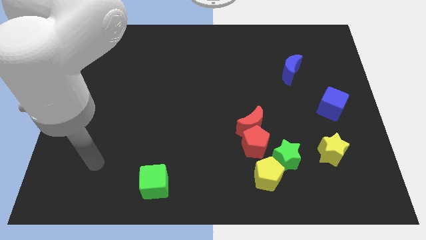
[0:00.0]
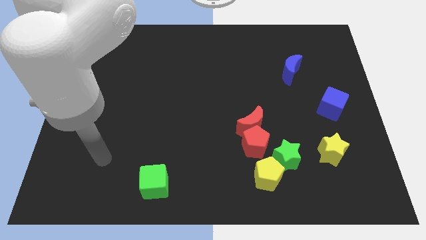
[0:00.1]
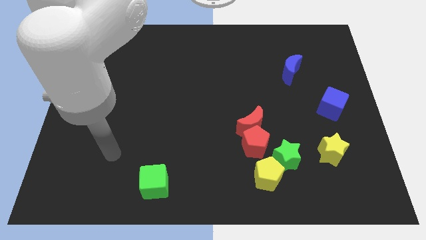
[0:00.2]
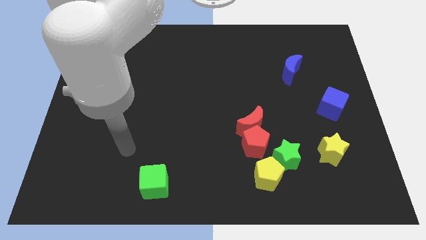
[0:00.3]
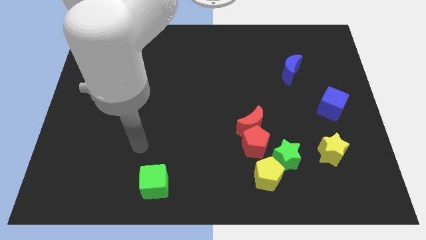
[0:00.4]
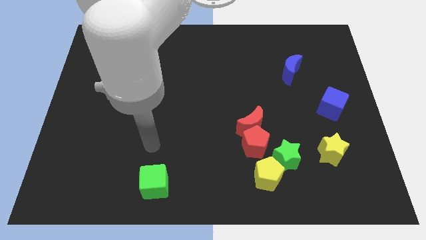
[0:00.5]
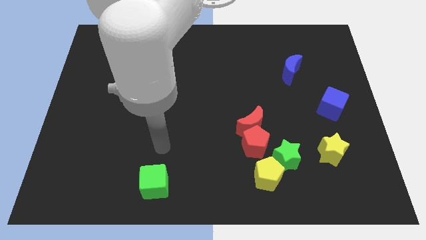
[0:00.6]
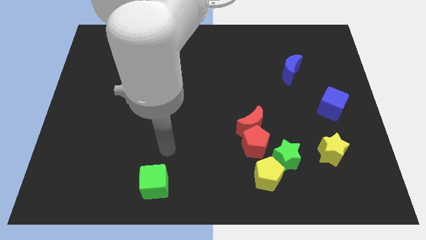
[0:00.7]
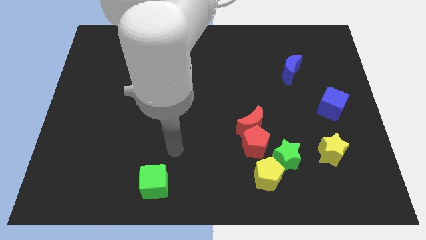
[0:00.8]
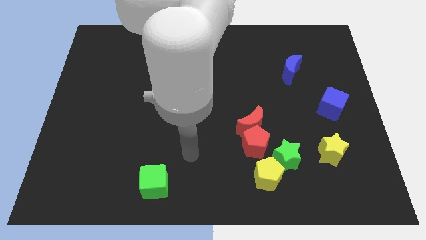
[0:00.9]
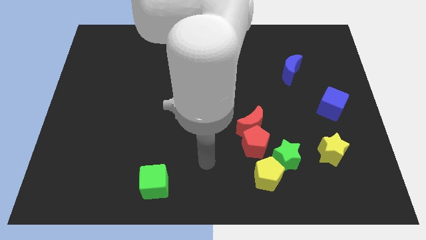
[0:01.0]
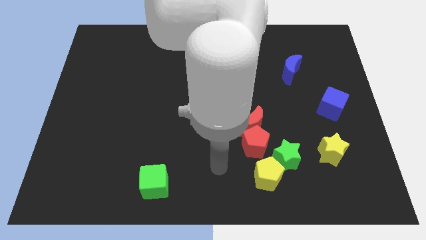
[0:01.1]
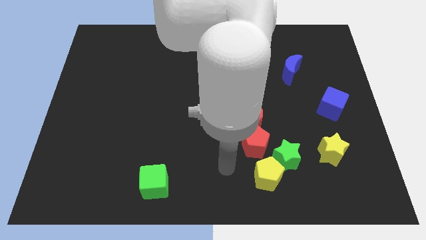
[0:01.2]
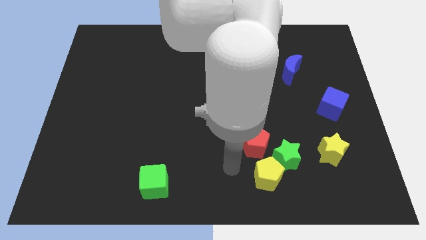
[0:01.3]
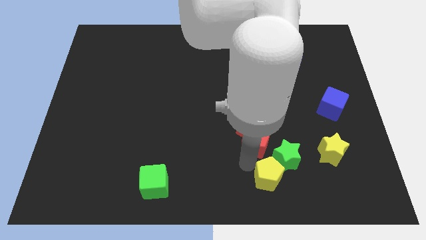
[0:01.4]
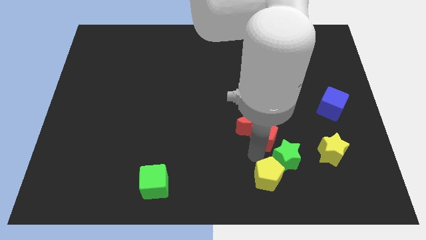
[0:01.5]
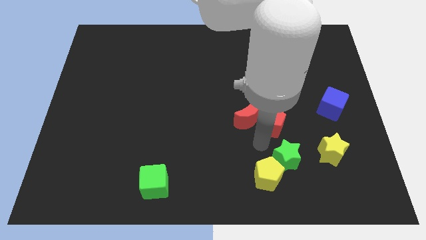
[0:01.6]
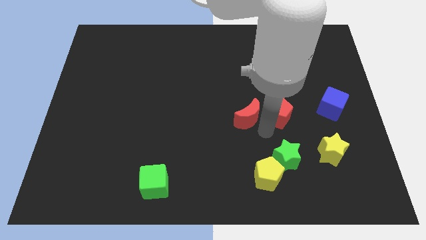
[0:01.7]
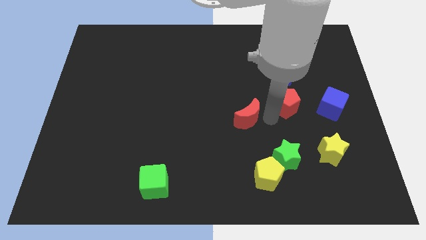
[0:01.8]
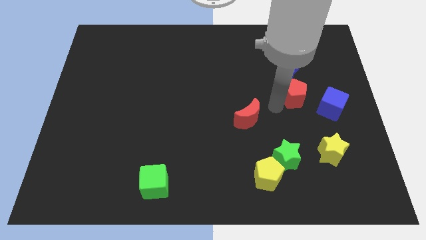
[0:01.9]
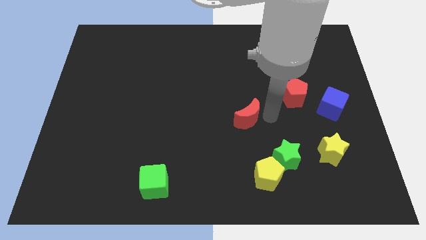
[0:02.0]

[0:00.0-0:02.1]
move the red pentagon vertically at the bottom of the blue crescent

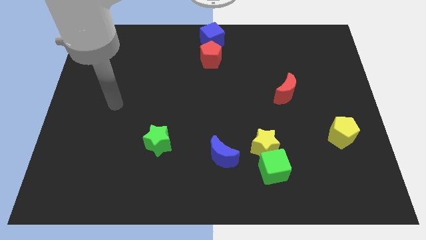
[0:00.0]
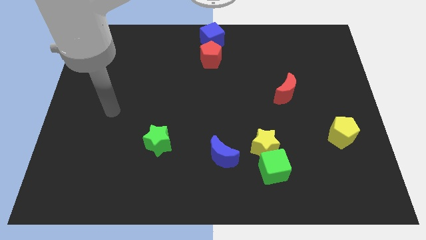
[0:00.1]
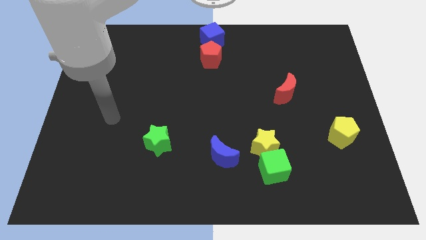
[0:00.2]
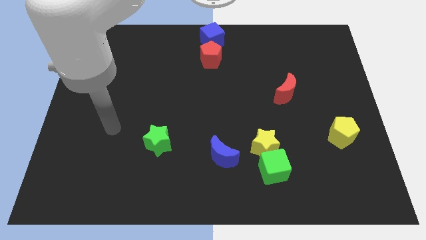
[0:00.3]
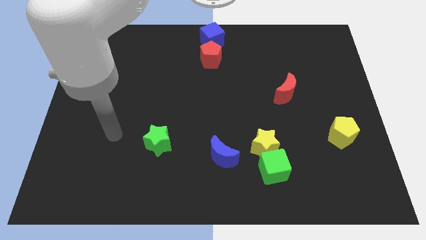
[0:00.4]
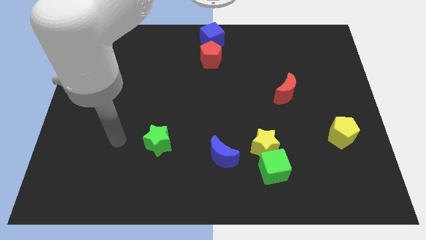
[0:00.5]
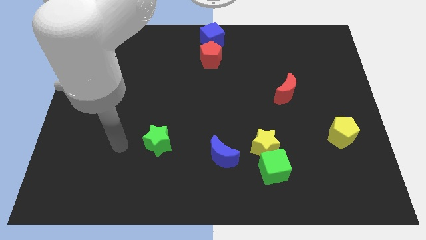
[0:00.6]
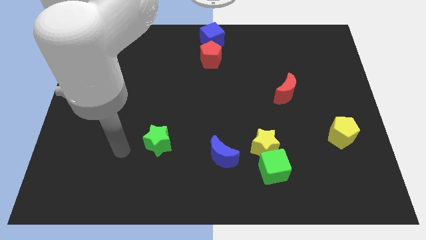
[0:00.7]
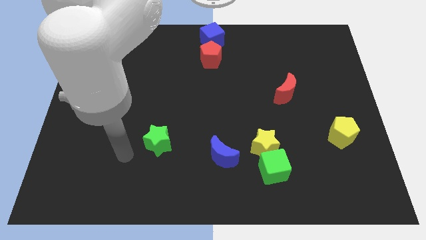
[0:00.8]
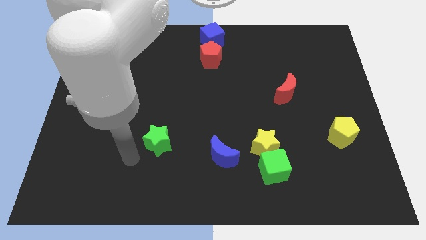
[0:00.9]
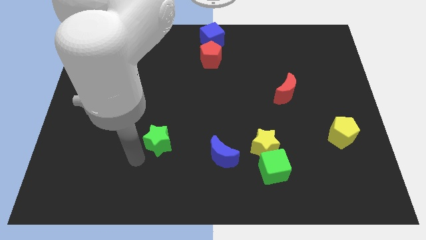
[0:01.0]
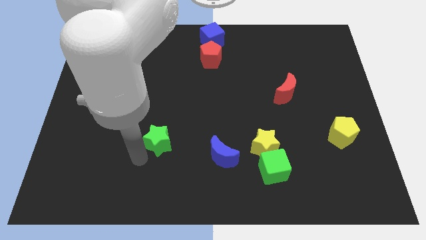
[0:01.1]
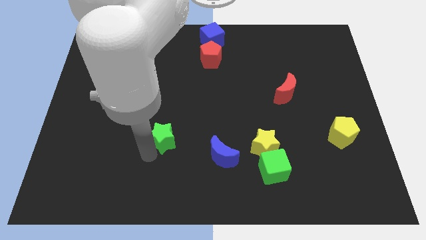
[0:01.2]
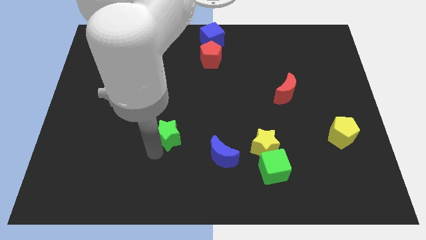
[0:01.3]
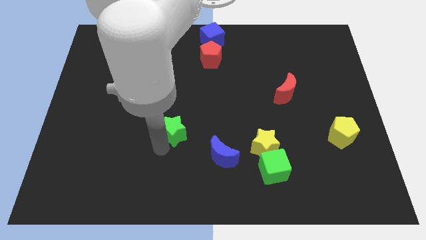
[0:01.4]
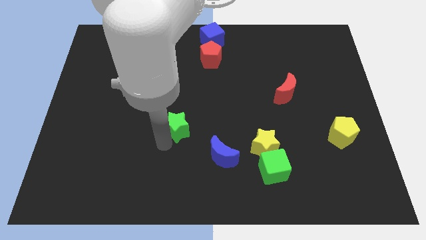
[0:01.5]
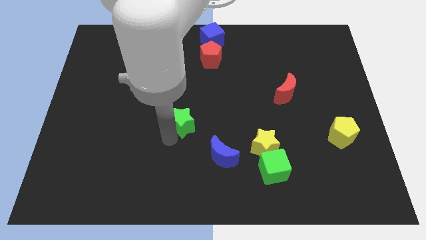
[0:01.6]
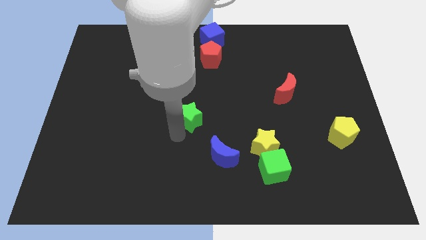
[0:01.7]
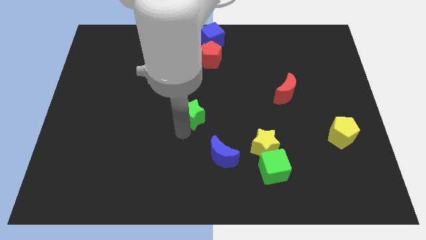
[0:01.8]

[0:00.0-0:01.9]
move your arm to the green star

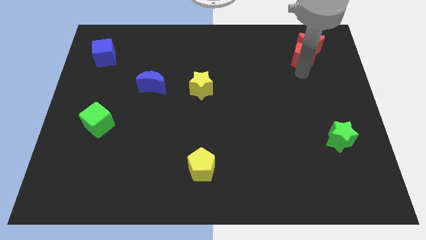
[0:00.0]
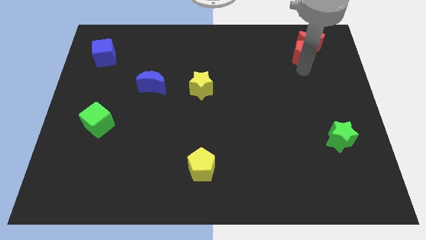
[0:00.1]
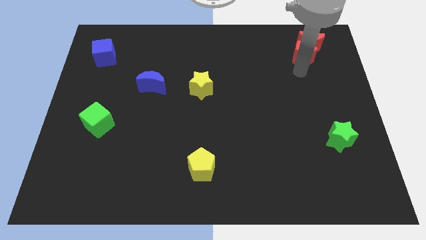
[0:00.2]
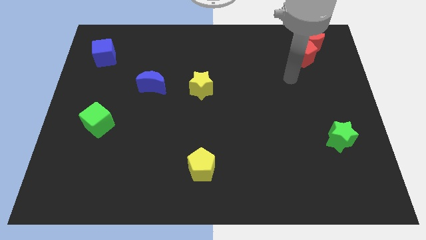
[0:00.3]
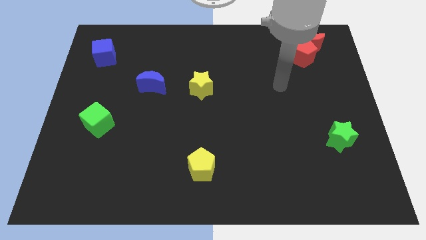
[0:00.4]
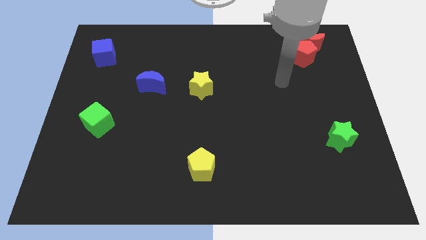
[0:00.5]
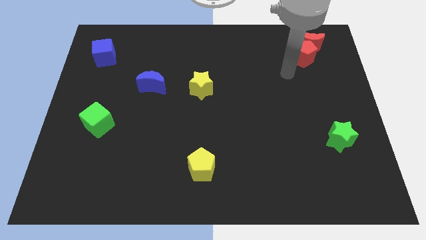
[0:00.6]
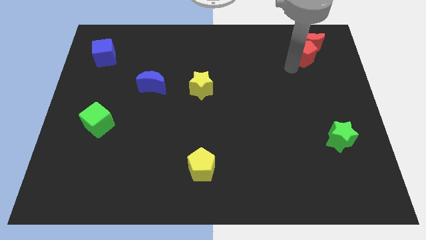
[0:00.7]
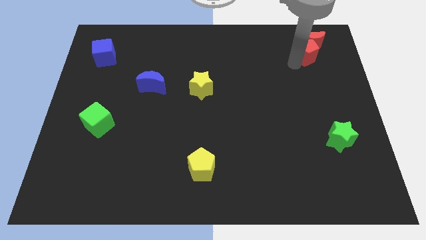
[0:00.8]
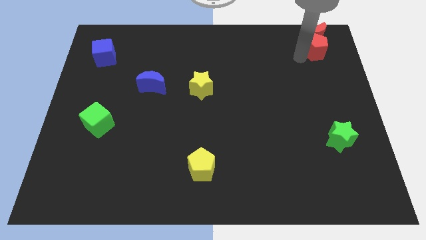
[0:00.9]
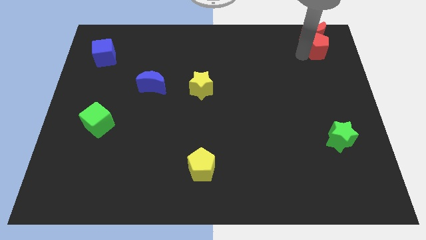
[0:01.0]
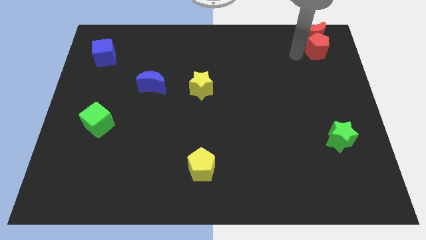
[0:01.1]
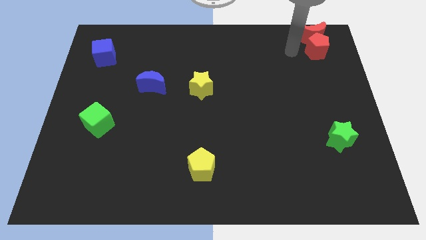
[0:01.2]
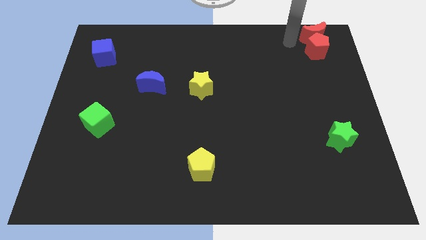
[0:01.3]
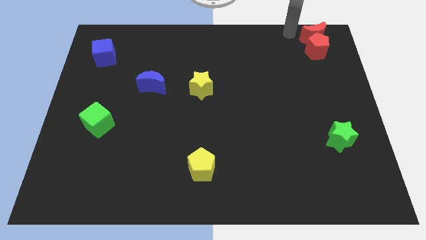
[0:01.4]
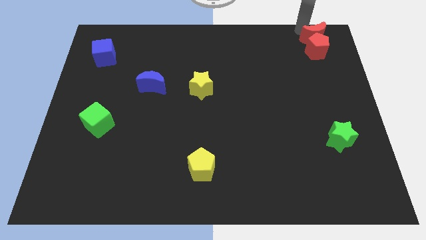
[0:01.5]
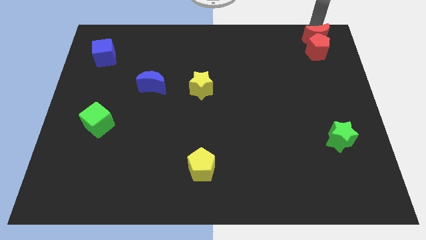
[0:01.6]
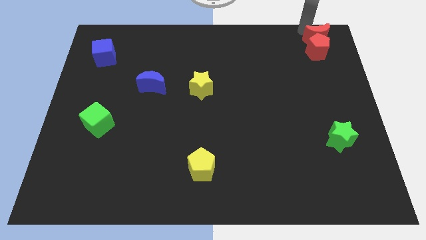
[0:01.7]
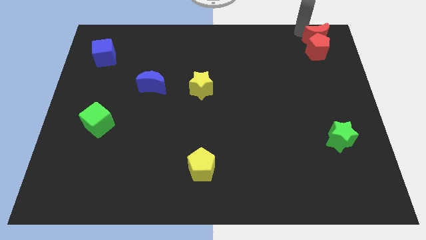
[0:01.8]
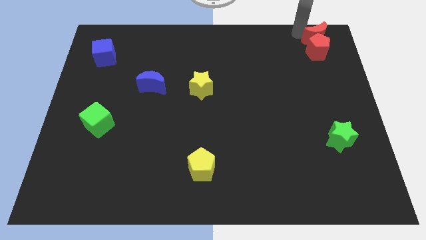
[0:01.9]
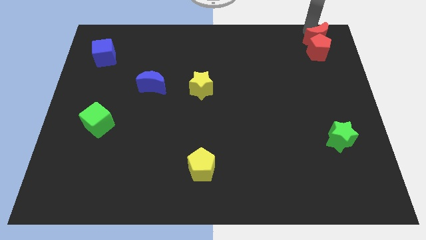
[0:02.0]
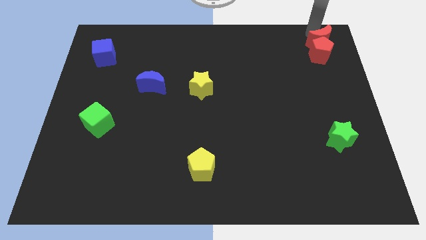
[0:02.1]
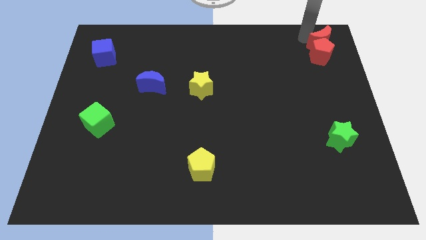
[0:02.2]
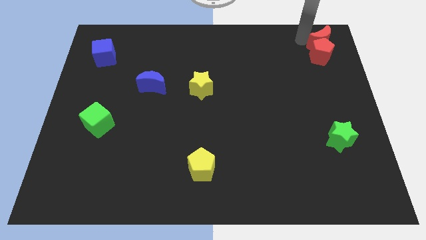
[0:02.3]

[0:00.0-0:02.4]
push the red crescent and red pentagon to the top right corner

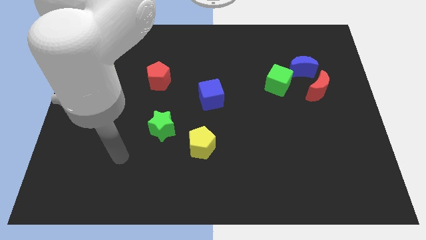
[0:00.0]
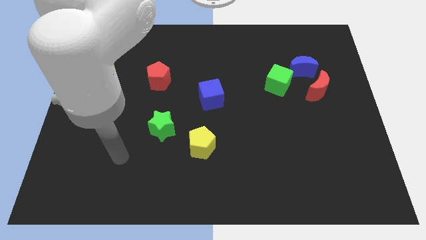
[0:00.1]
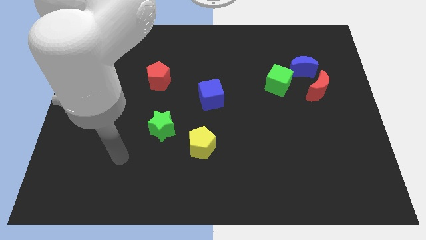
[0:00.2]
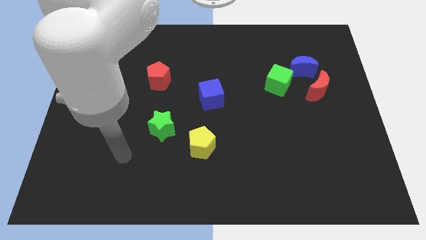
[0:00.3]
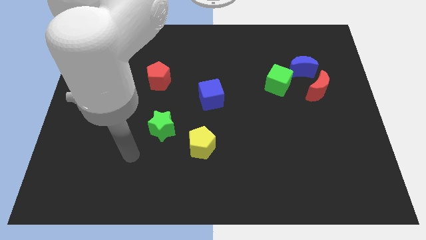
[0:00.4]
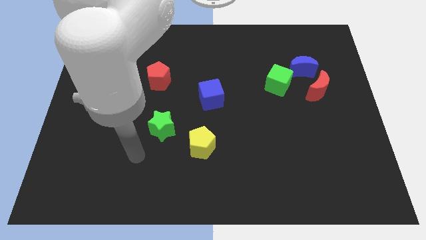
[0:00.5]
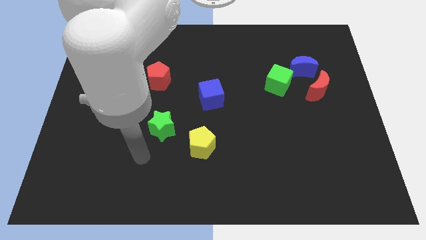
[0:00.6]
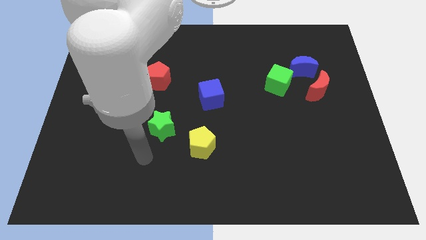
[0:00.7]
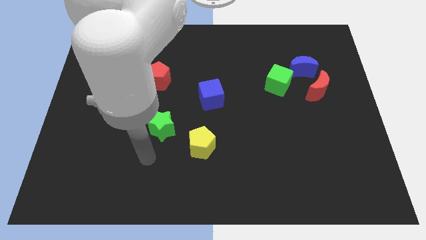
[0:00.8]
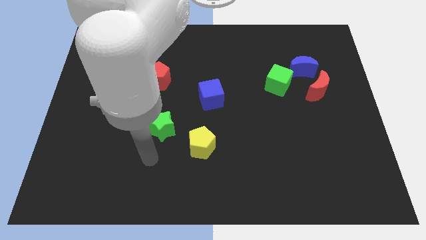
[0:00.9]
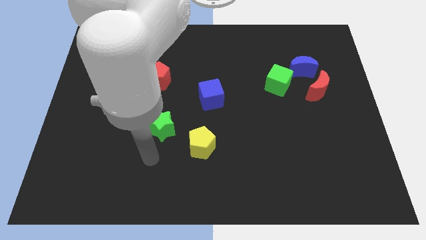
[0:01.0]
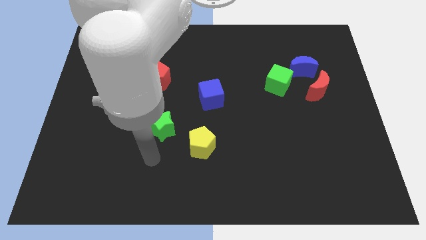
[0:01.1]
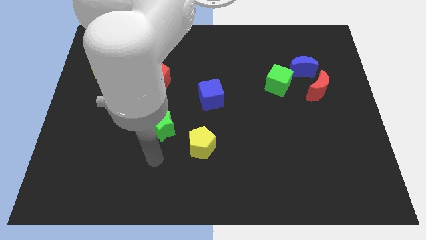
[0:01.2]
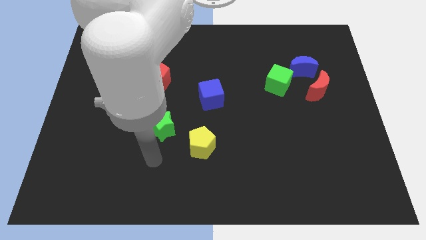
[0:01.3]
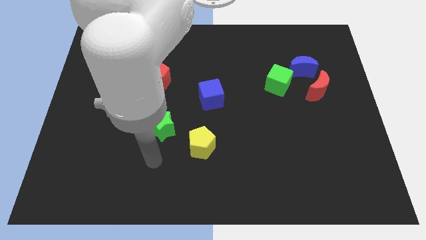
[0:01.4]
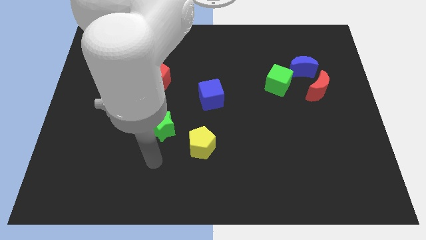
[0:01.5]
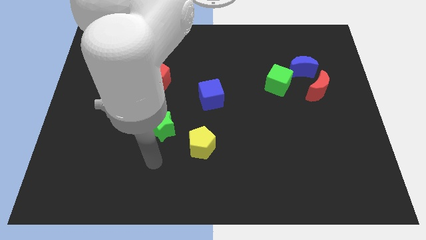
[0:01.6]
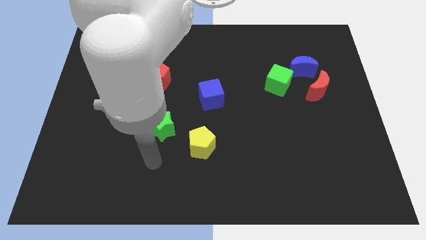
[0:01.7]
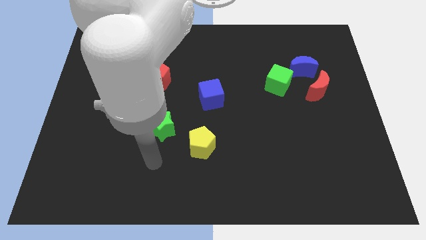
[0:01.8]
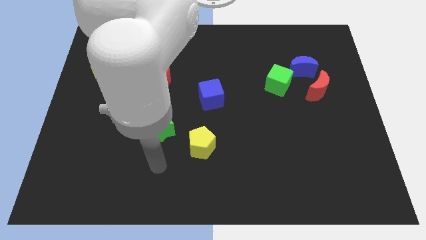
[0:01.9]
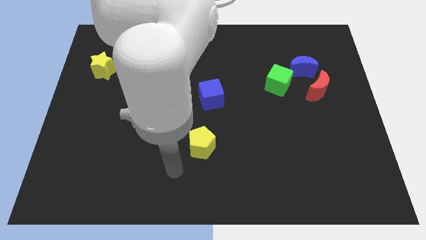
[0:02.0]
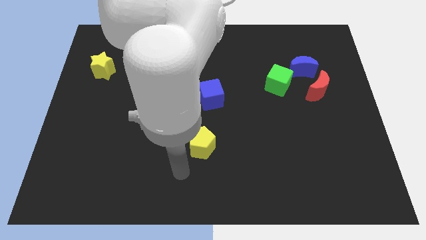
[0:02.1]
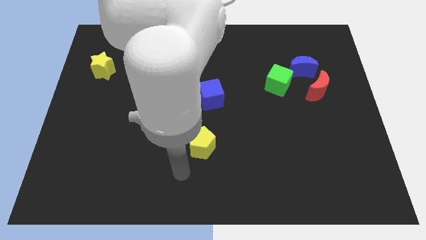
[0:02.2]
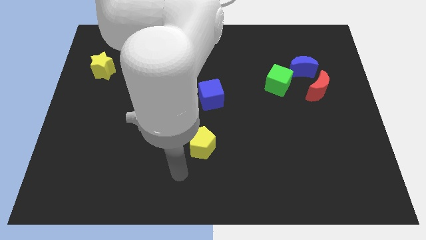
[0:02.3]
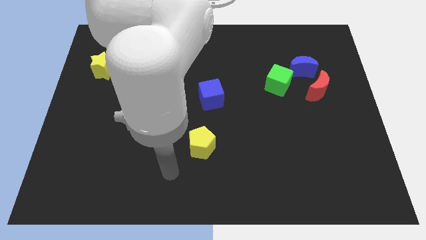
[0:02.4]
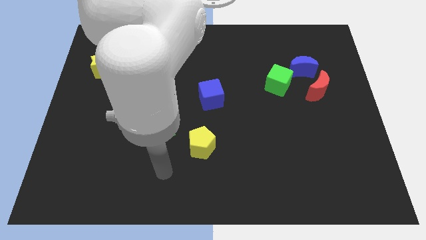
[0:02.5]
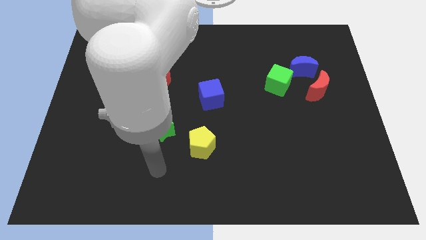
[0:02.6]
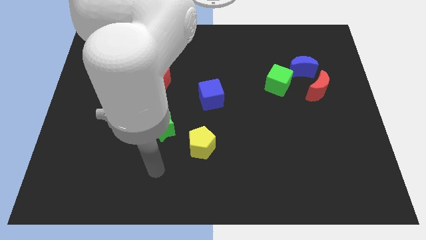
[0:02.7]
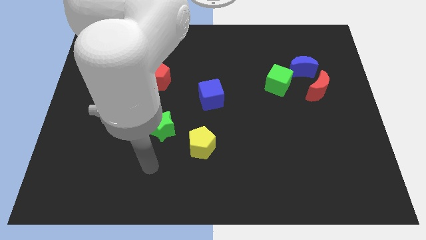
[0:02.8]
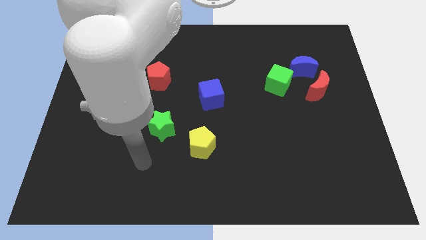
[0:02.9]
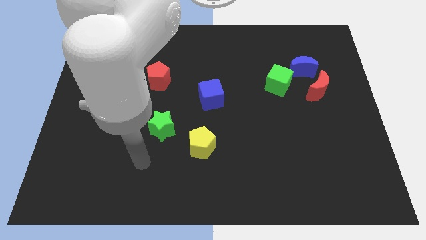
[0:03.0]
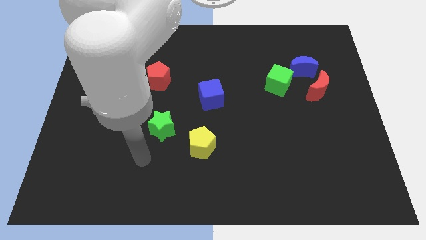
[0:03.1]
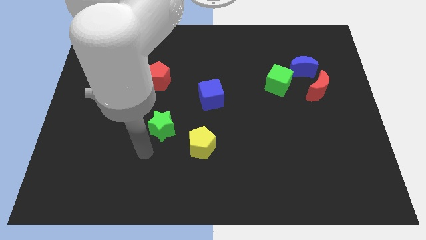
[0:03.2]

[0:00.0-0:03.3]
move your arm to the bottom of green star
